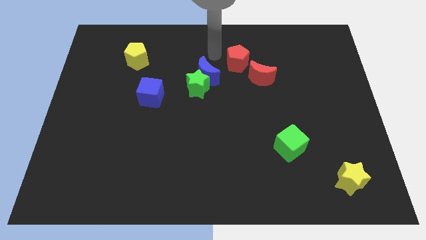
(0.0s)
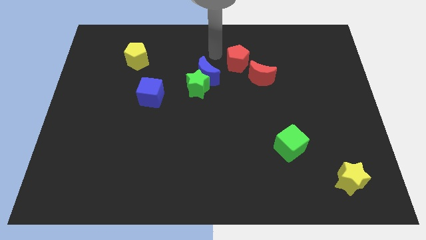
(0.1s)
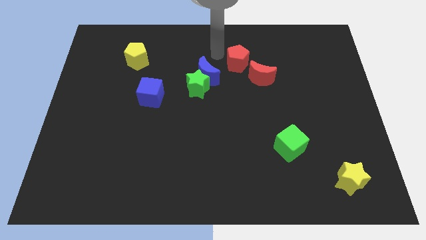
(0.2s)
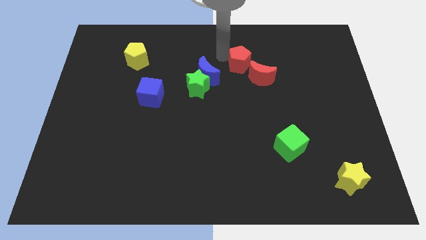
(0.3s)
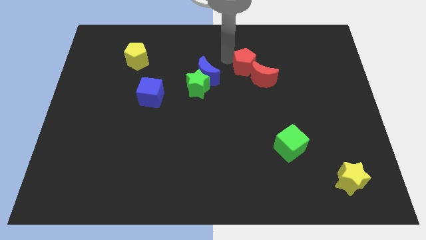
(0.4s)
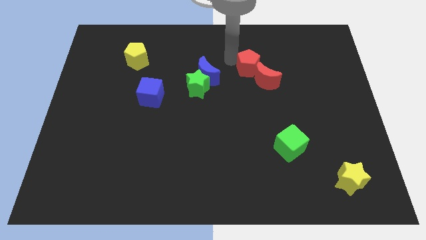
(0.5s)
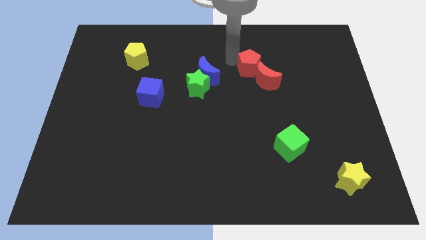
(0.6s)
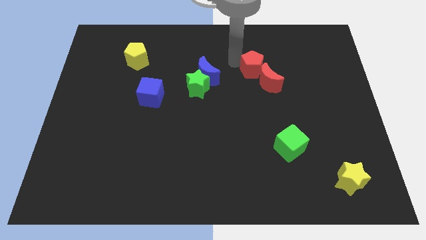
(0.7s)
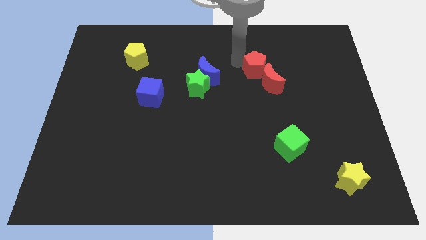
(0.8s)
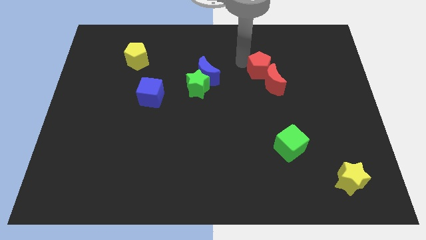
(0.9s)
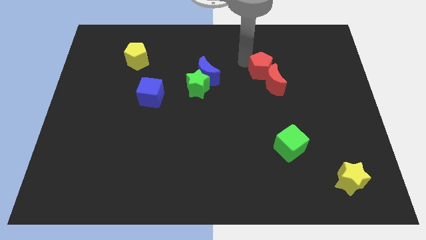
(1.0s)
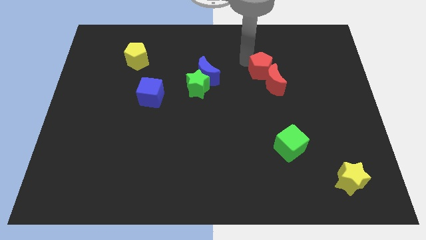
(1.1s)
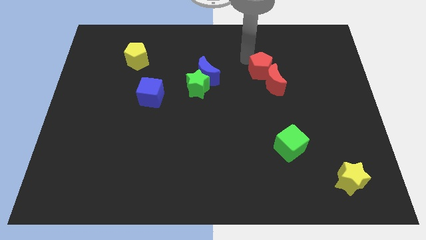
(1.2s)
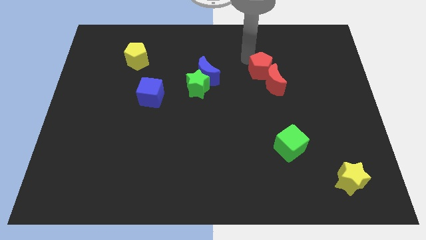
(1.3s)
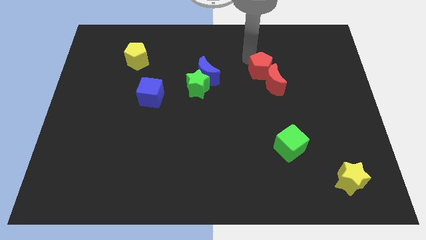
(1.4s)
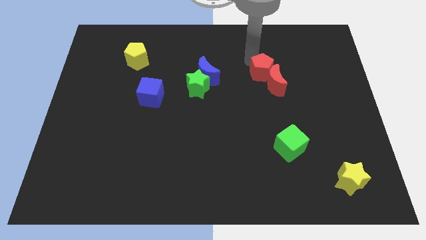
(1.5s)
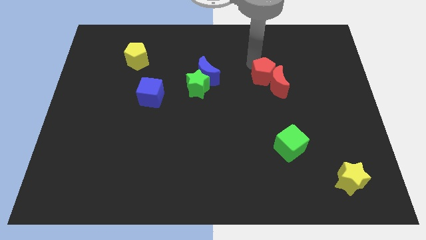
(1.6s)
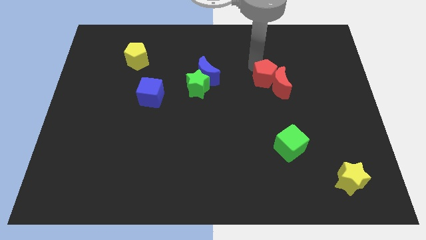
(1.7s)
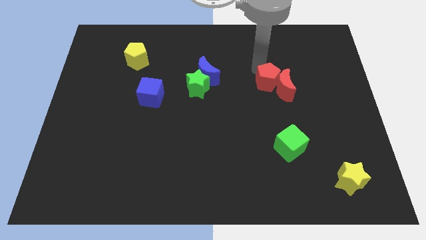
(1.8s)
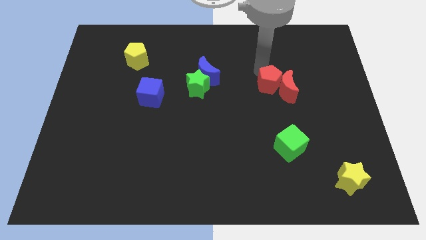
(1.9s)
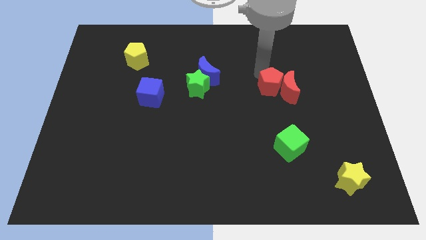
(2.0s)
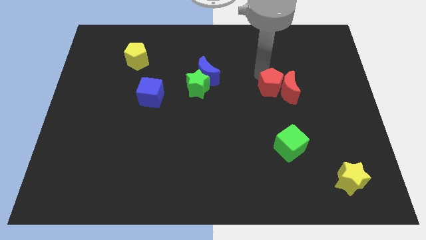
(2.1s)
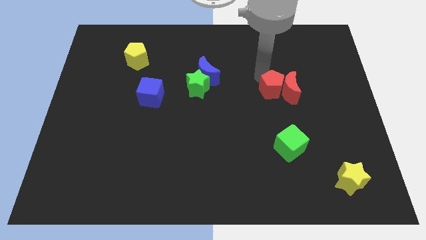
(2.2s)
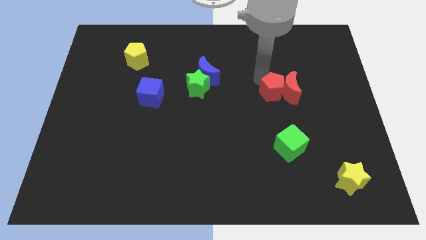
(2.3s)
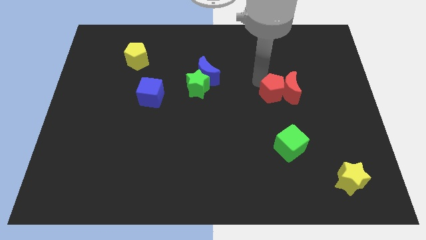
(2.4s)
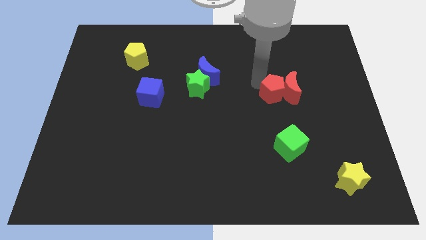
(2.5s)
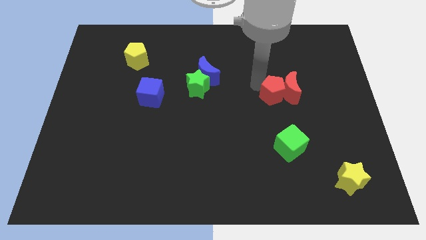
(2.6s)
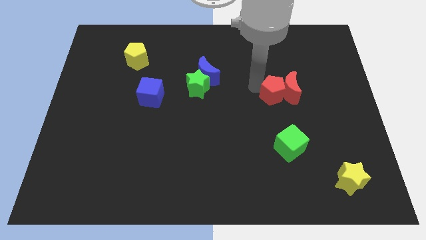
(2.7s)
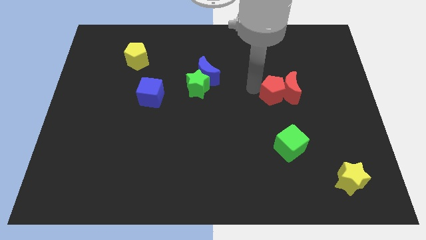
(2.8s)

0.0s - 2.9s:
slightly push the red blocks towards the right side of the board

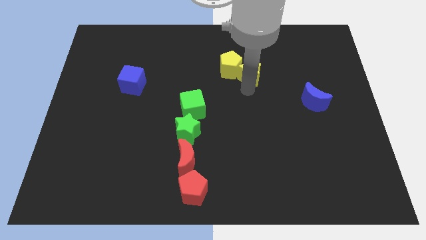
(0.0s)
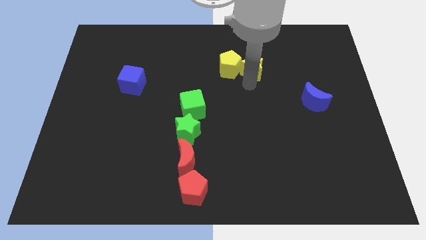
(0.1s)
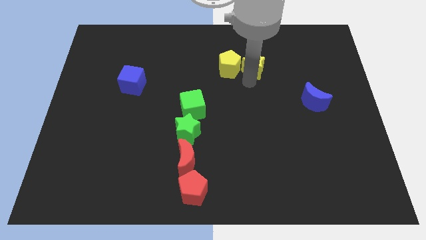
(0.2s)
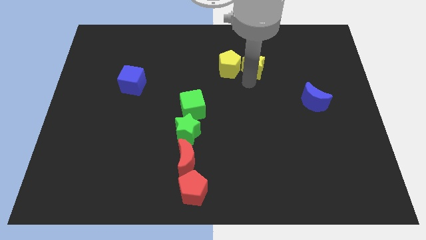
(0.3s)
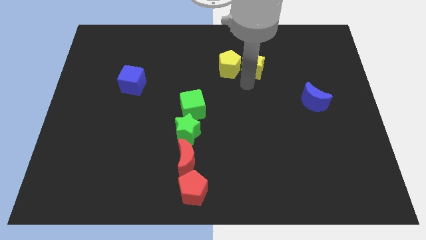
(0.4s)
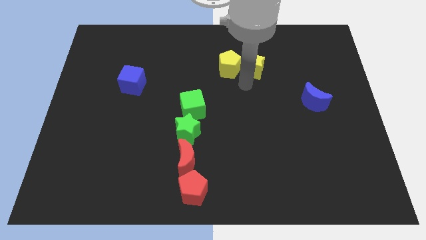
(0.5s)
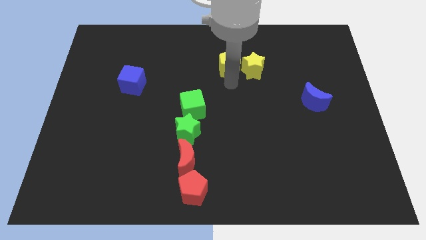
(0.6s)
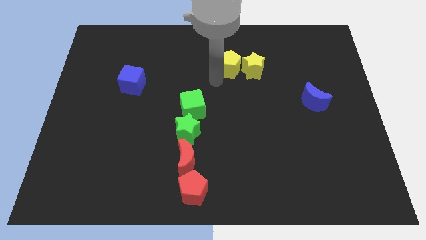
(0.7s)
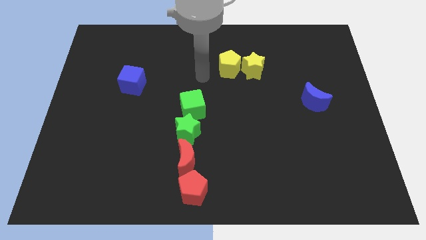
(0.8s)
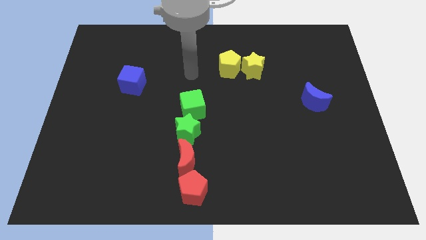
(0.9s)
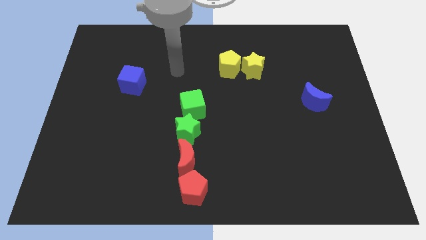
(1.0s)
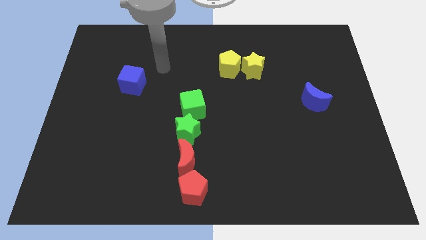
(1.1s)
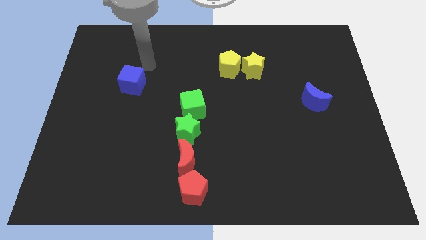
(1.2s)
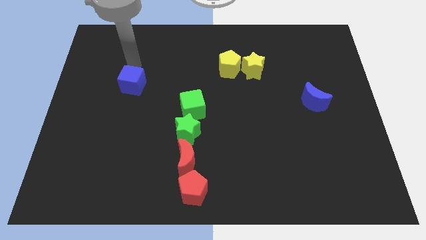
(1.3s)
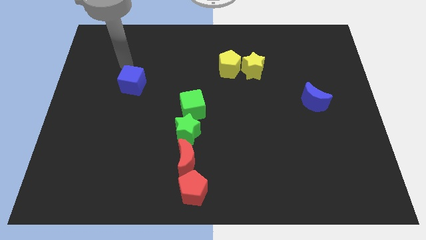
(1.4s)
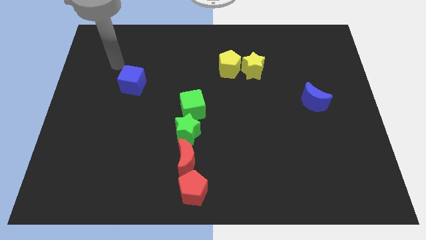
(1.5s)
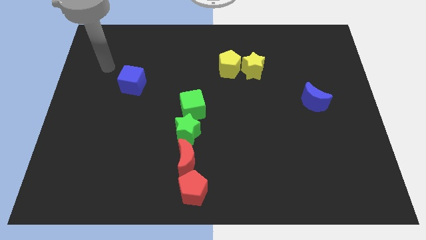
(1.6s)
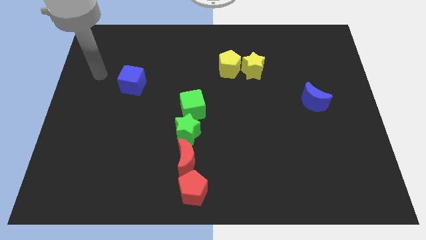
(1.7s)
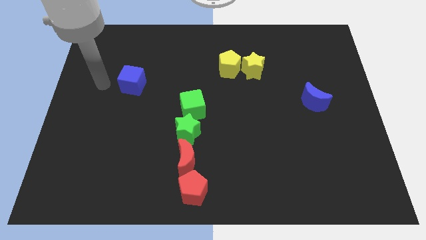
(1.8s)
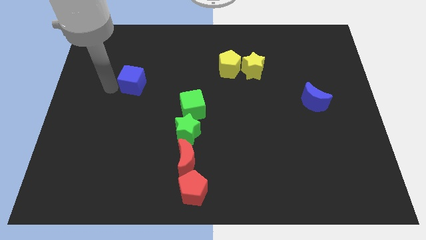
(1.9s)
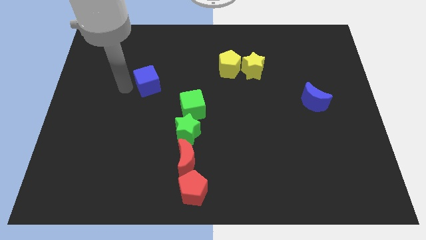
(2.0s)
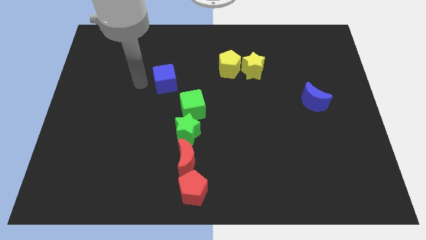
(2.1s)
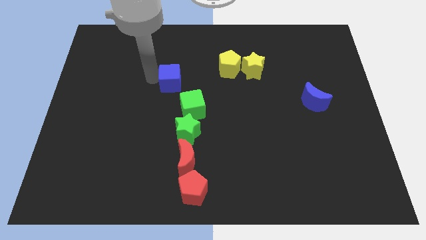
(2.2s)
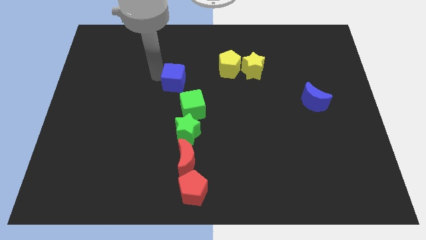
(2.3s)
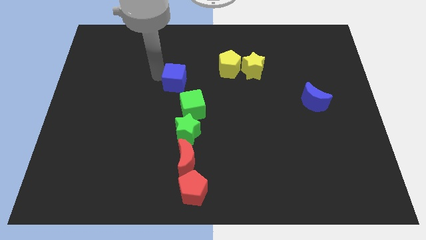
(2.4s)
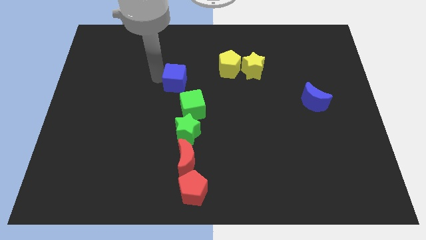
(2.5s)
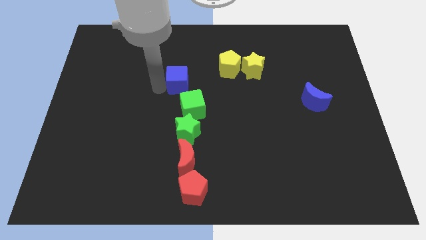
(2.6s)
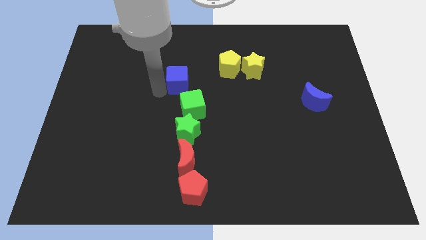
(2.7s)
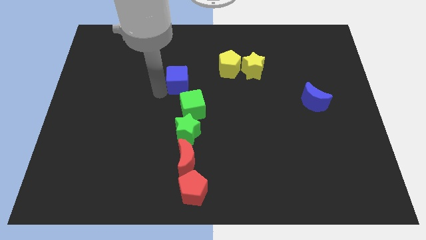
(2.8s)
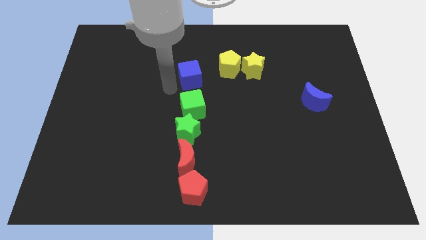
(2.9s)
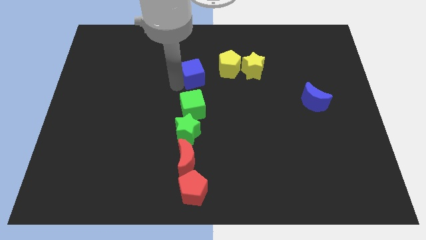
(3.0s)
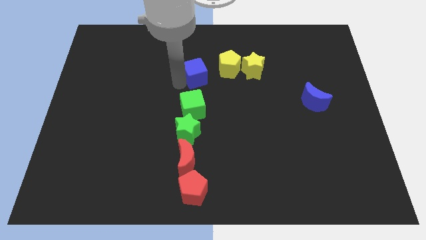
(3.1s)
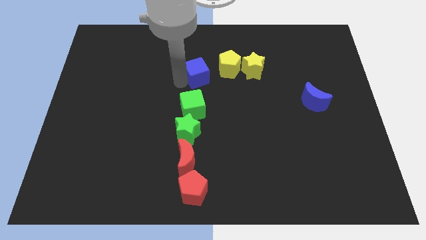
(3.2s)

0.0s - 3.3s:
push the blue cube to the left side of the yellow pentagon

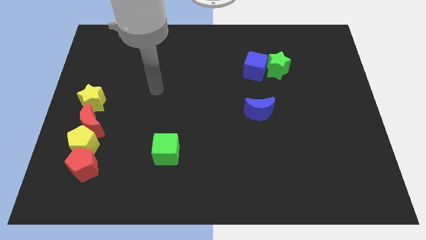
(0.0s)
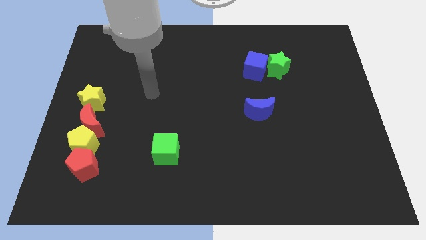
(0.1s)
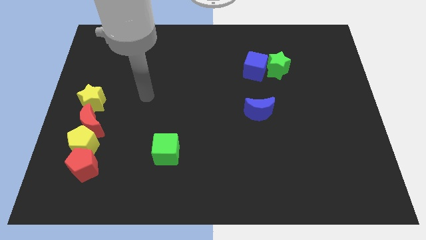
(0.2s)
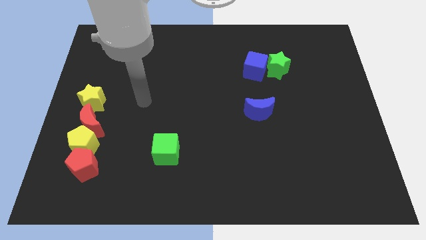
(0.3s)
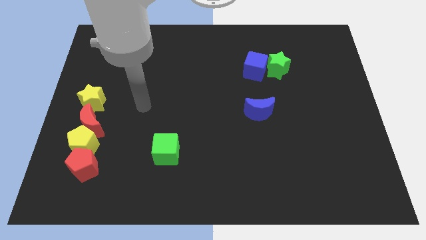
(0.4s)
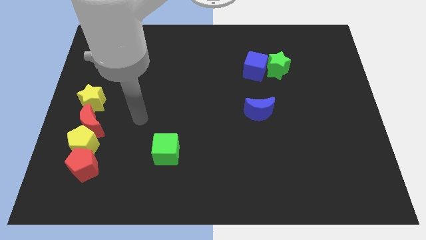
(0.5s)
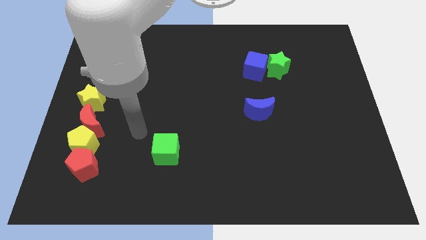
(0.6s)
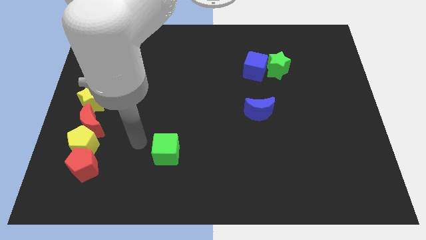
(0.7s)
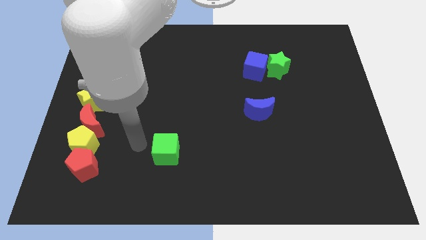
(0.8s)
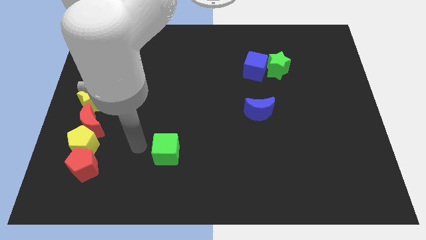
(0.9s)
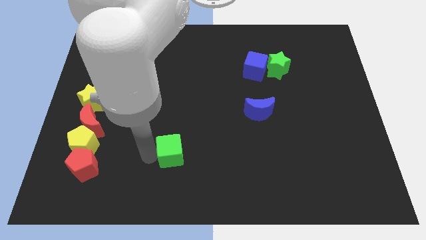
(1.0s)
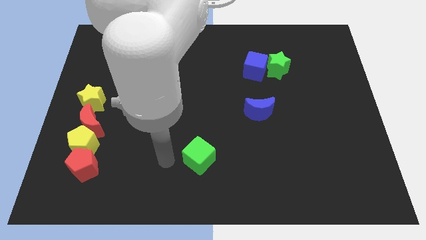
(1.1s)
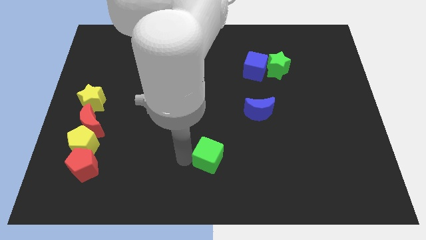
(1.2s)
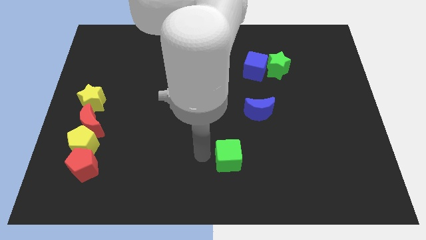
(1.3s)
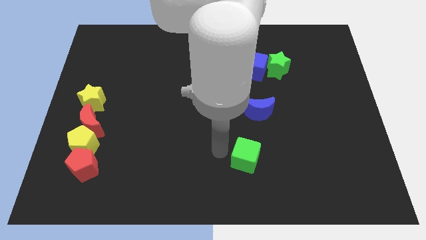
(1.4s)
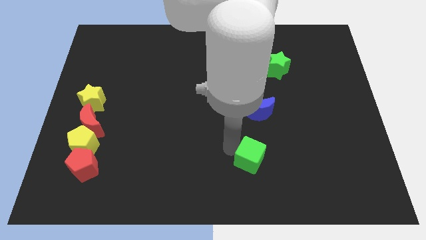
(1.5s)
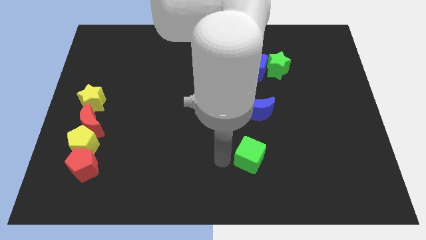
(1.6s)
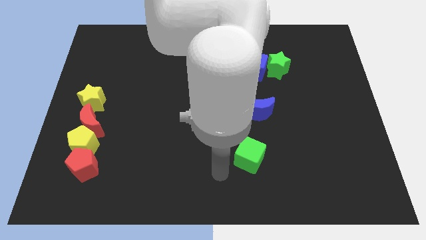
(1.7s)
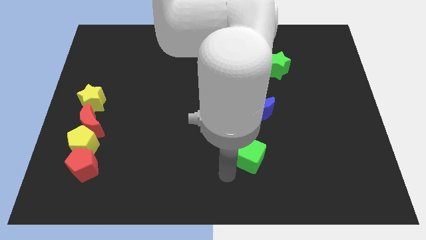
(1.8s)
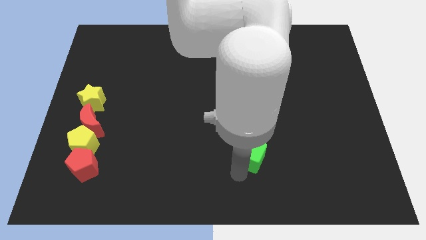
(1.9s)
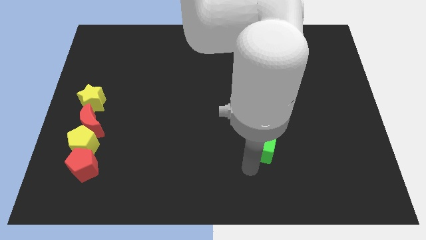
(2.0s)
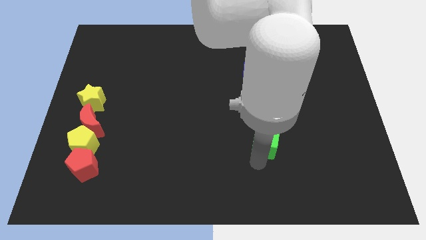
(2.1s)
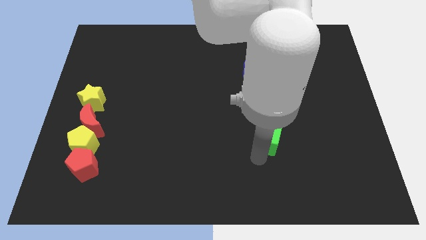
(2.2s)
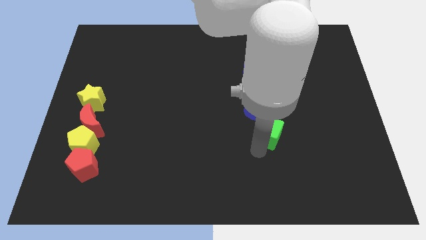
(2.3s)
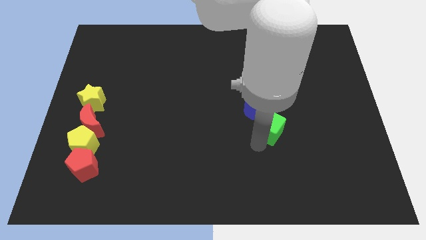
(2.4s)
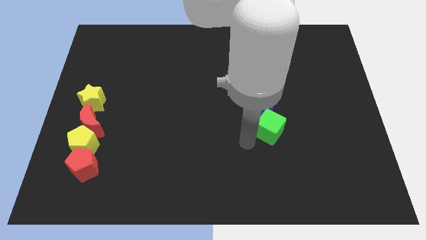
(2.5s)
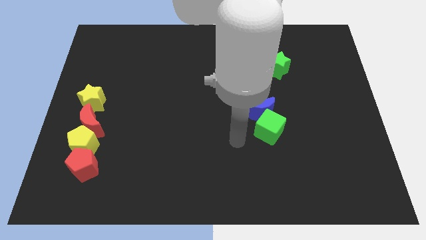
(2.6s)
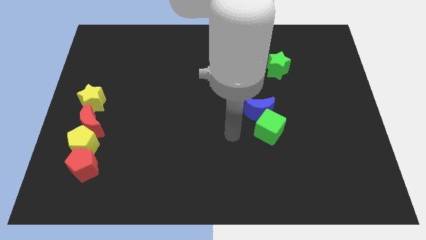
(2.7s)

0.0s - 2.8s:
place green cube below blue moon
